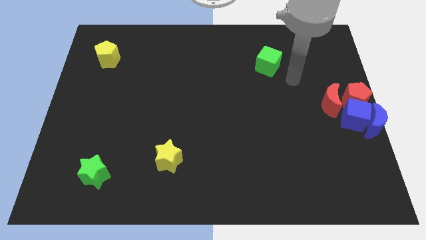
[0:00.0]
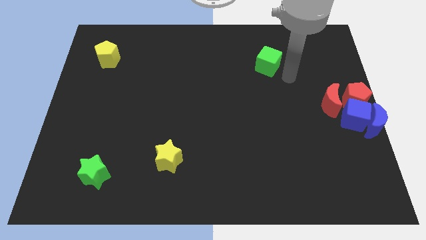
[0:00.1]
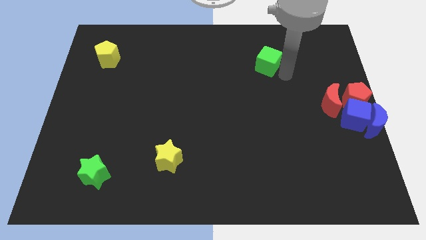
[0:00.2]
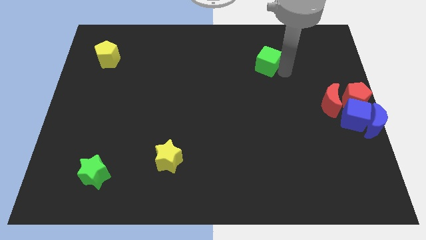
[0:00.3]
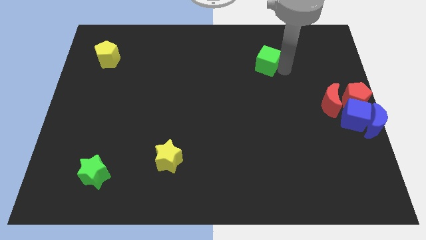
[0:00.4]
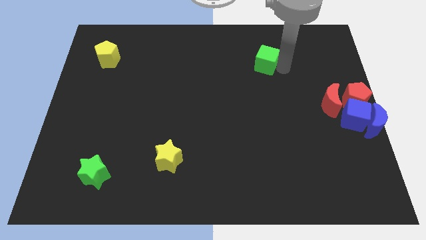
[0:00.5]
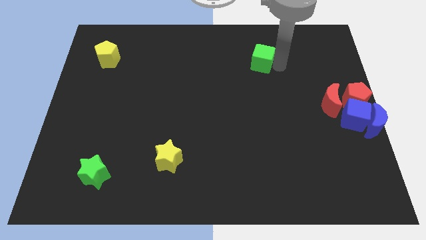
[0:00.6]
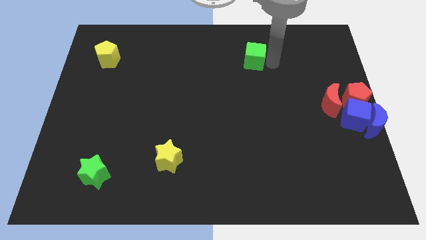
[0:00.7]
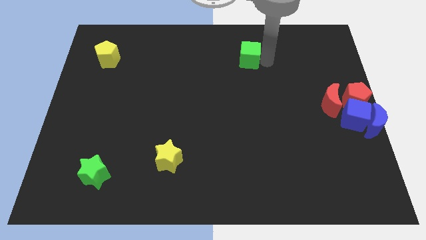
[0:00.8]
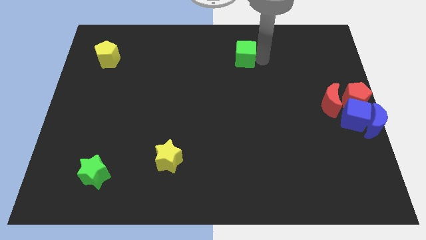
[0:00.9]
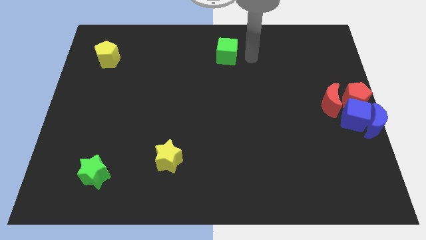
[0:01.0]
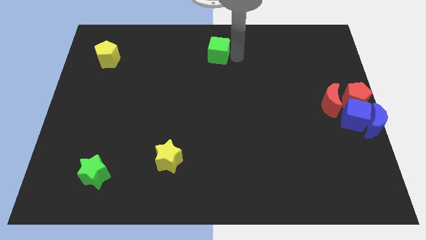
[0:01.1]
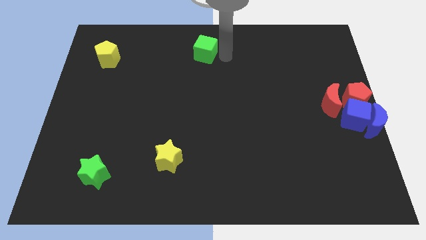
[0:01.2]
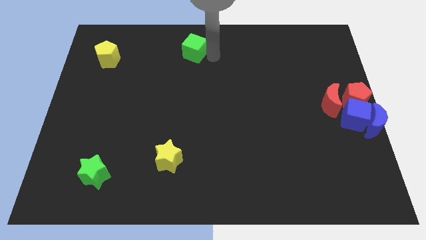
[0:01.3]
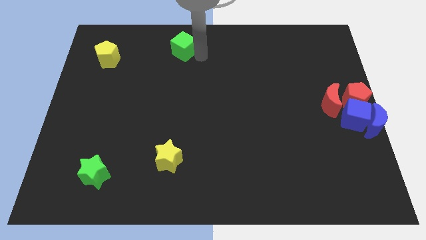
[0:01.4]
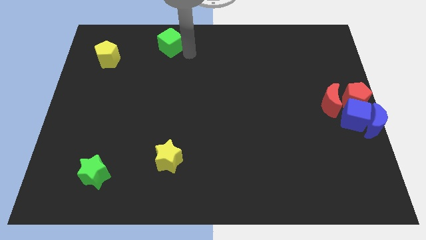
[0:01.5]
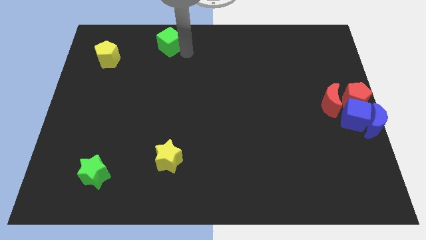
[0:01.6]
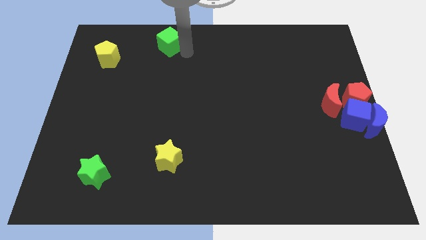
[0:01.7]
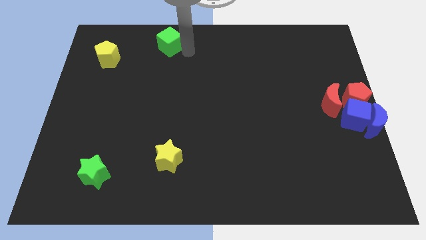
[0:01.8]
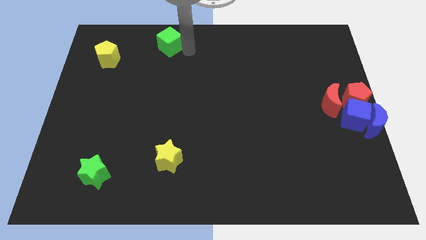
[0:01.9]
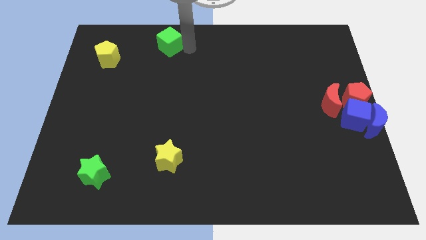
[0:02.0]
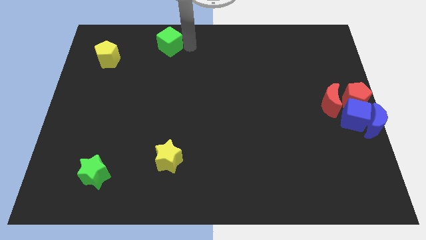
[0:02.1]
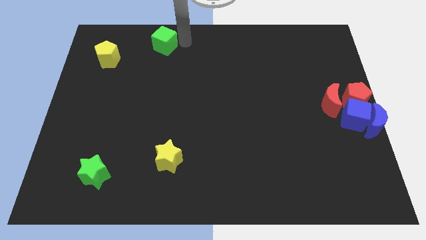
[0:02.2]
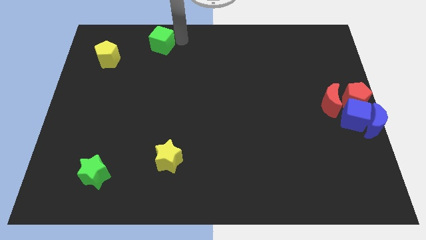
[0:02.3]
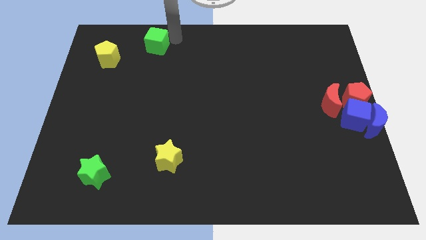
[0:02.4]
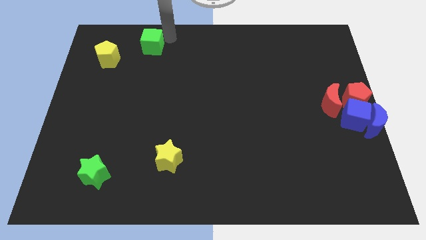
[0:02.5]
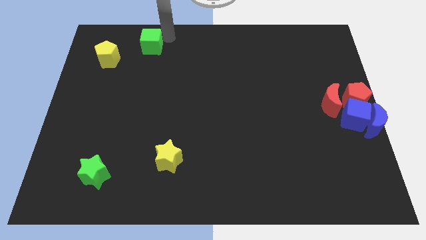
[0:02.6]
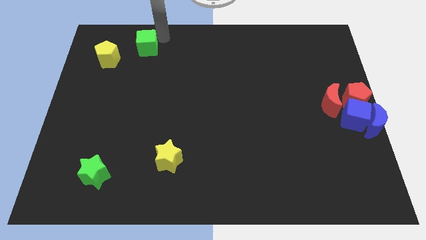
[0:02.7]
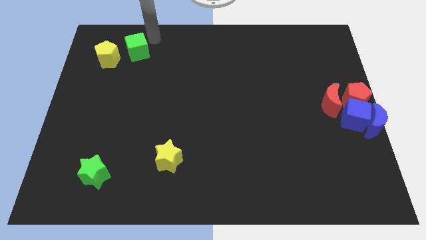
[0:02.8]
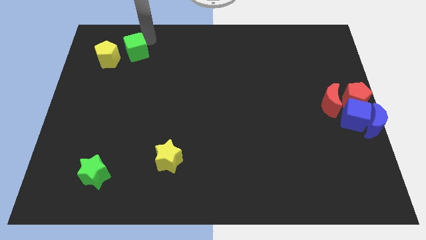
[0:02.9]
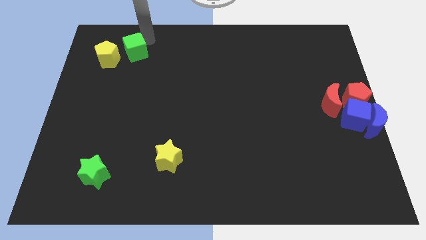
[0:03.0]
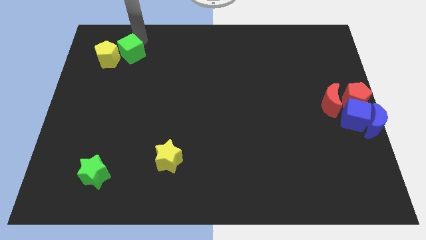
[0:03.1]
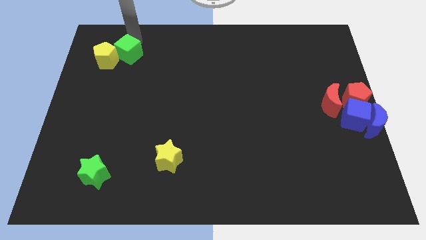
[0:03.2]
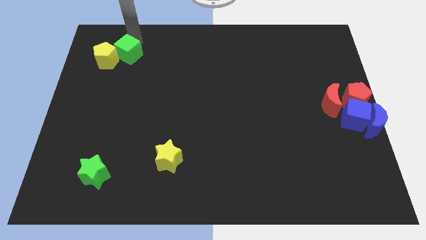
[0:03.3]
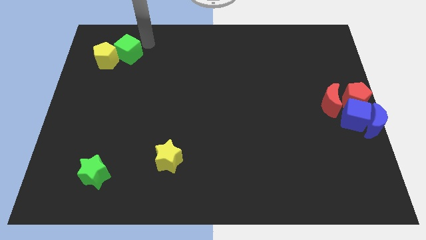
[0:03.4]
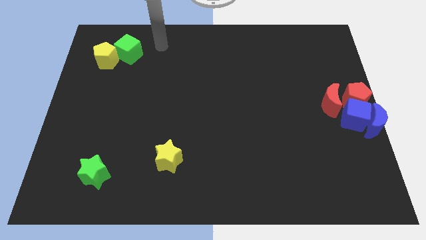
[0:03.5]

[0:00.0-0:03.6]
push the green cube into the yellow pentagon

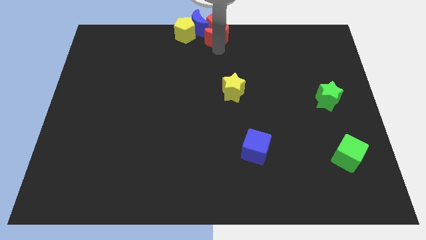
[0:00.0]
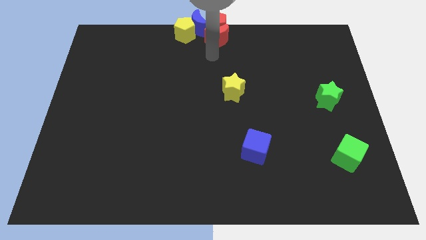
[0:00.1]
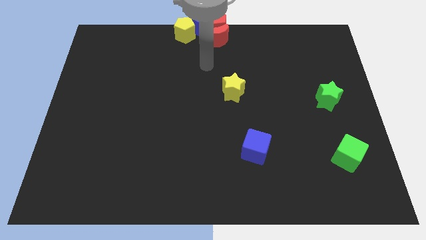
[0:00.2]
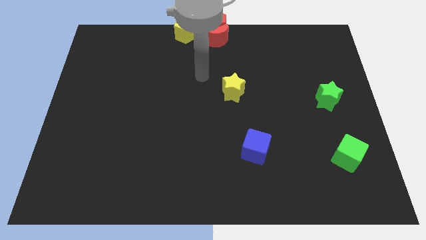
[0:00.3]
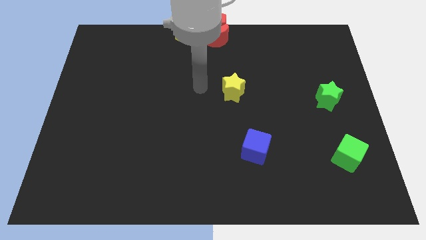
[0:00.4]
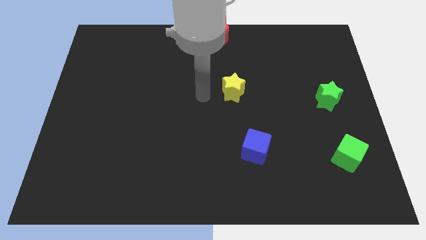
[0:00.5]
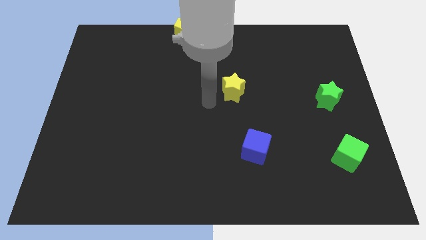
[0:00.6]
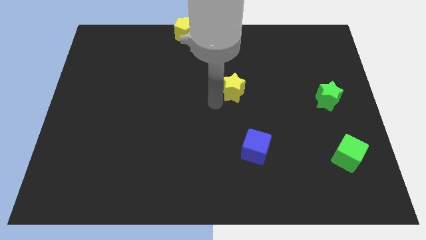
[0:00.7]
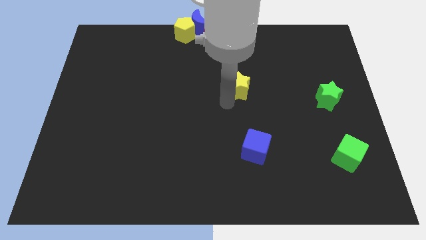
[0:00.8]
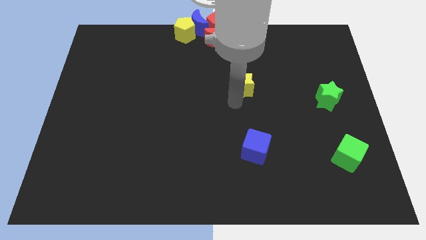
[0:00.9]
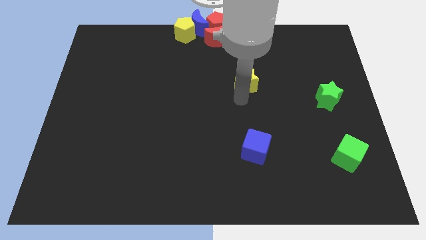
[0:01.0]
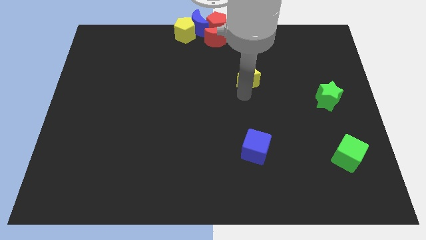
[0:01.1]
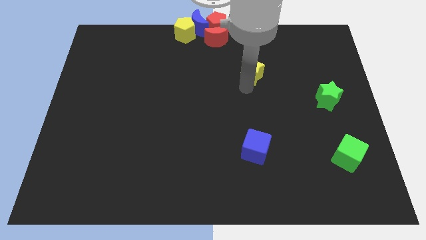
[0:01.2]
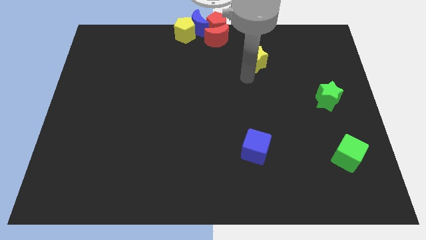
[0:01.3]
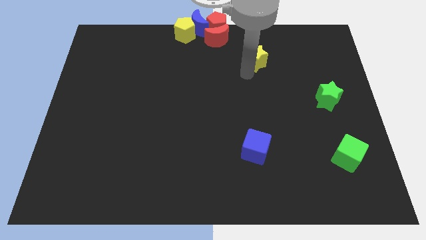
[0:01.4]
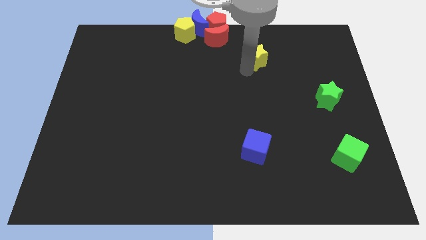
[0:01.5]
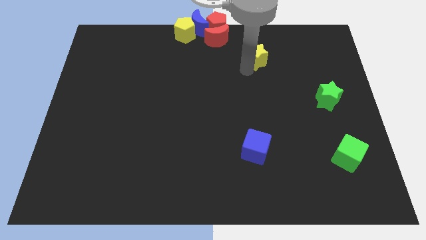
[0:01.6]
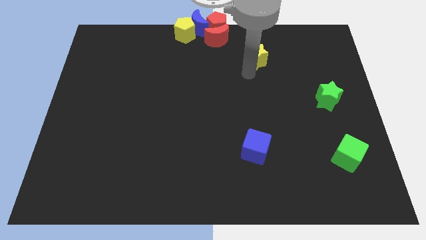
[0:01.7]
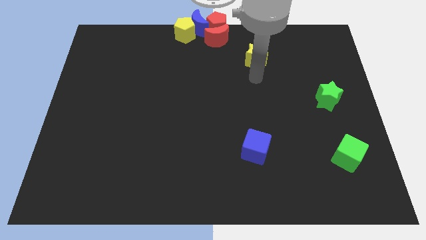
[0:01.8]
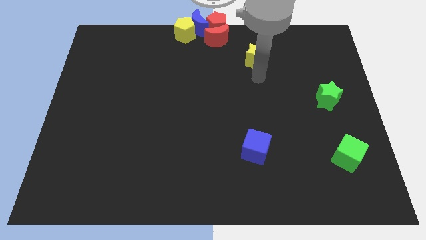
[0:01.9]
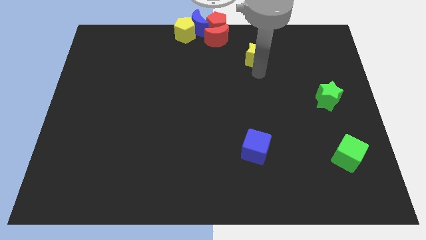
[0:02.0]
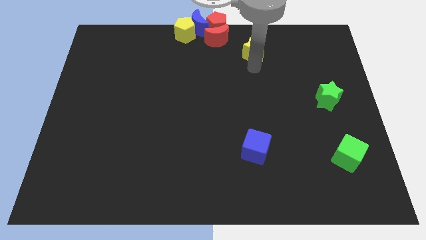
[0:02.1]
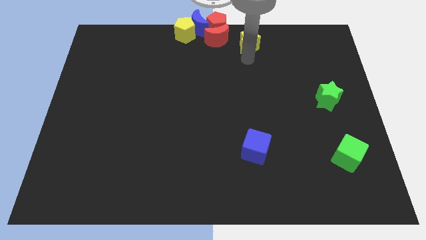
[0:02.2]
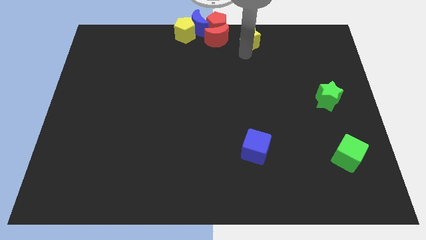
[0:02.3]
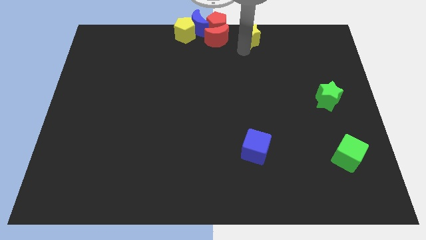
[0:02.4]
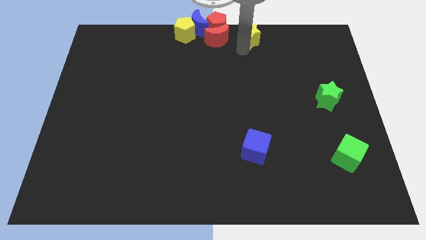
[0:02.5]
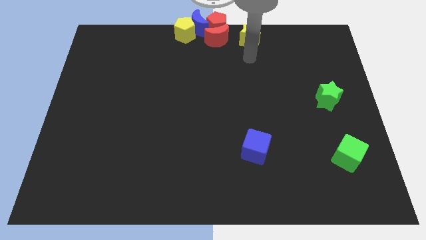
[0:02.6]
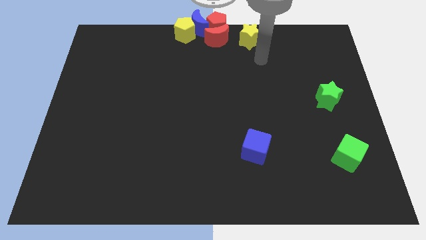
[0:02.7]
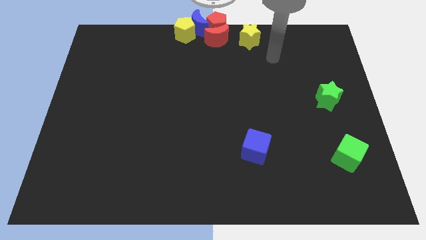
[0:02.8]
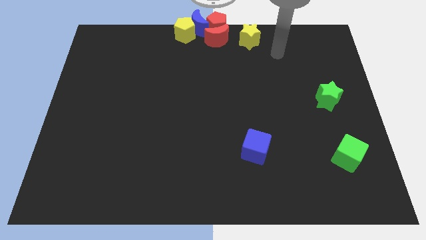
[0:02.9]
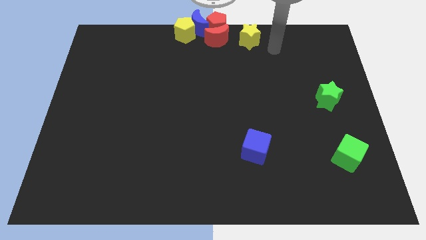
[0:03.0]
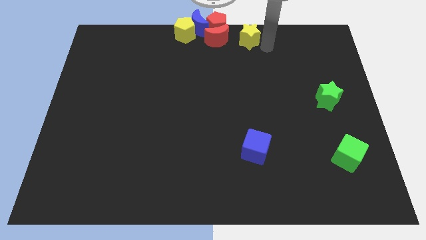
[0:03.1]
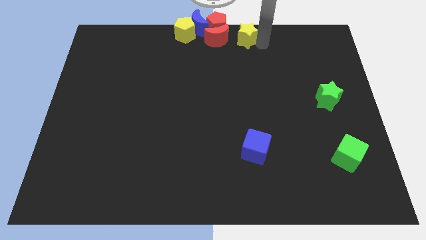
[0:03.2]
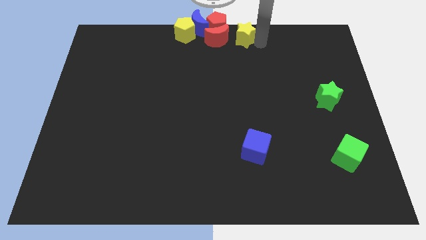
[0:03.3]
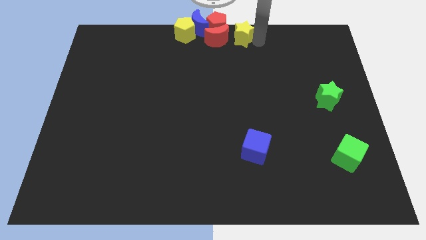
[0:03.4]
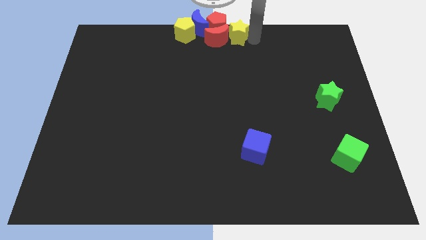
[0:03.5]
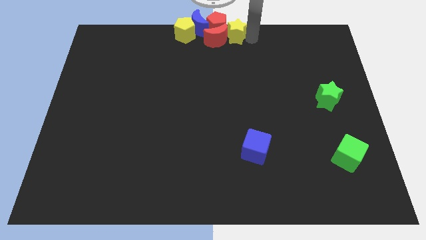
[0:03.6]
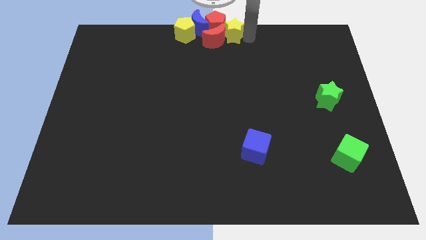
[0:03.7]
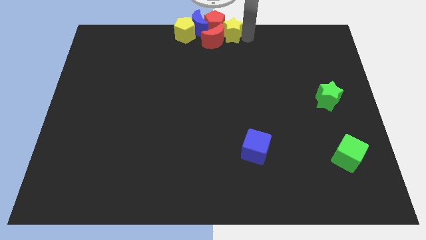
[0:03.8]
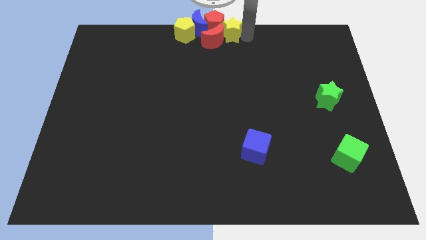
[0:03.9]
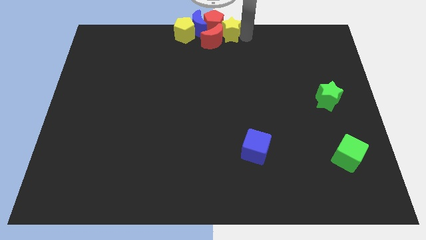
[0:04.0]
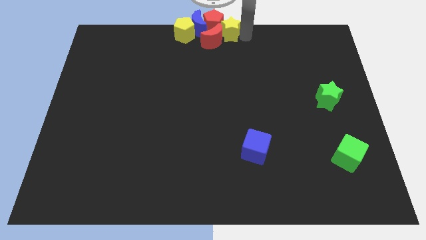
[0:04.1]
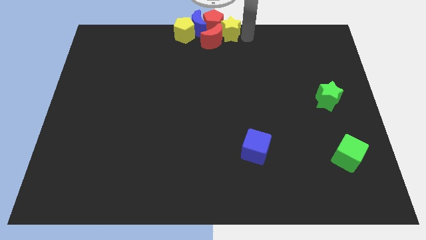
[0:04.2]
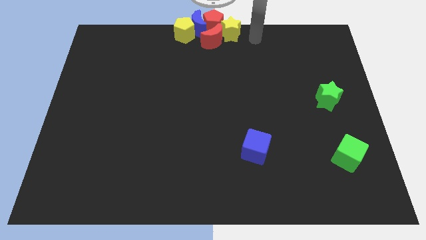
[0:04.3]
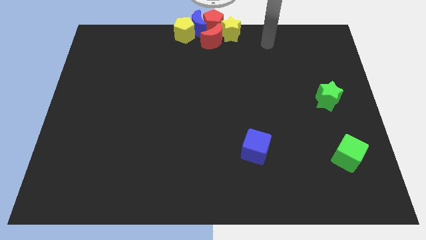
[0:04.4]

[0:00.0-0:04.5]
push yellow star to the right of red pentagon

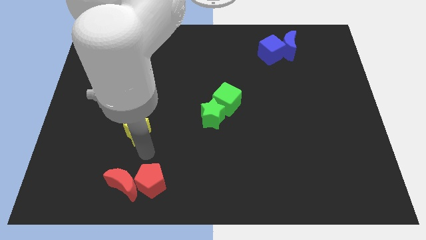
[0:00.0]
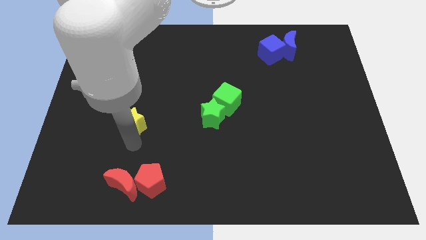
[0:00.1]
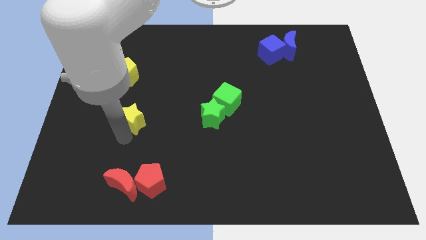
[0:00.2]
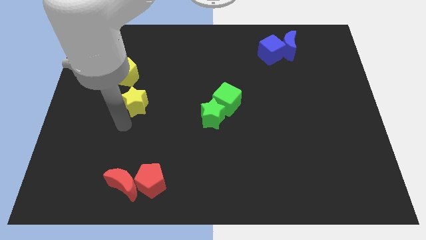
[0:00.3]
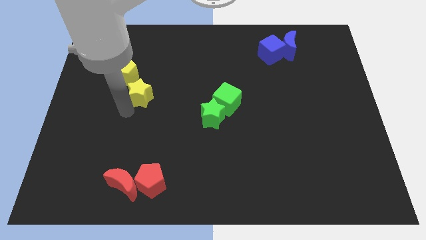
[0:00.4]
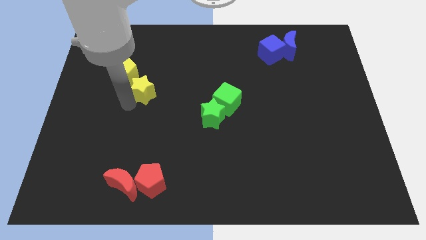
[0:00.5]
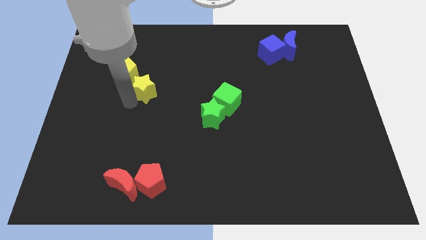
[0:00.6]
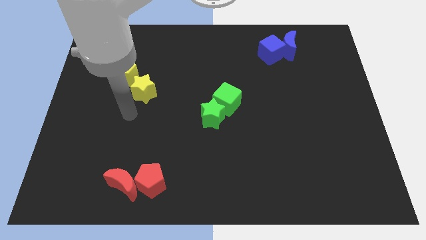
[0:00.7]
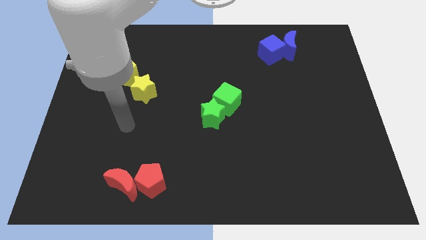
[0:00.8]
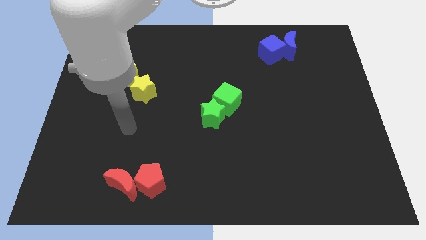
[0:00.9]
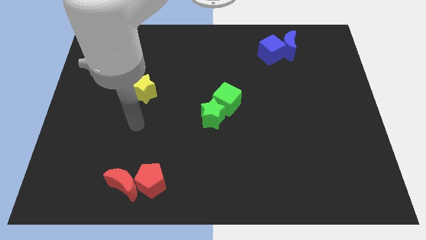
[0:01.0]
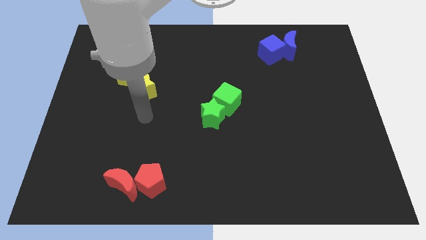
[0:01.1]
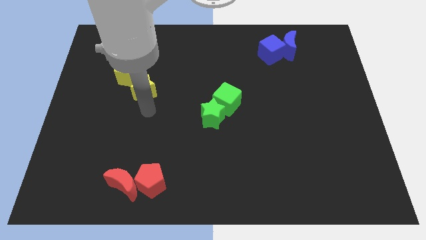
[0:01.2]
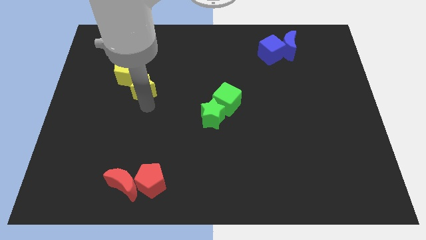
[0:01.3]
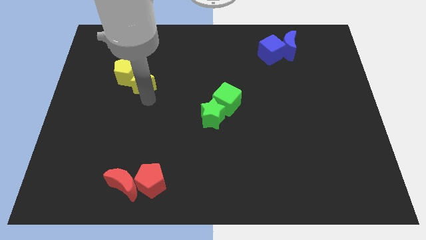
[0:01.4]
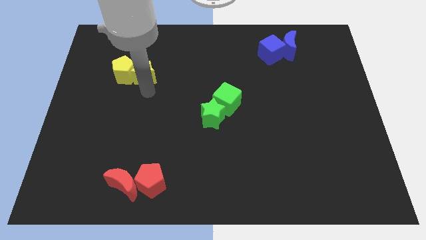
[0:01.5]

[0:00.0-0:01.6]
place the yellow star at the right of the yellow pentagon
